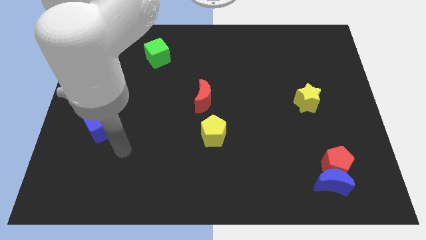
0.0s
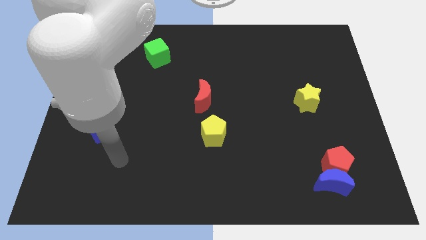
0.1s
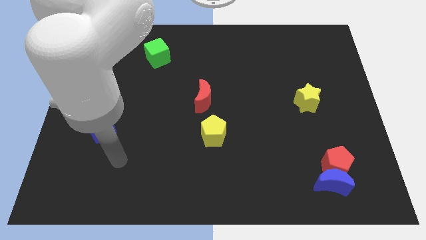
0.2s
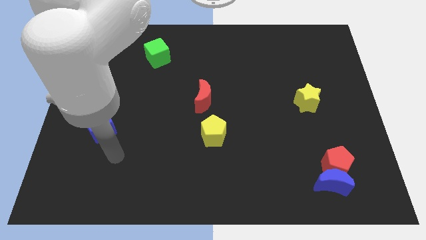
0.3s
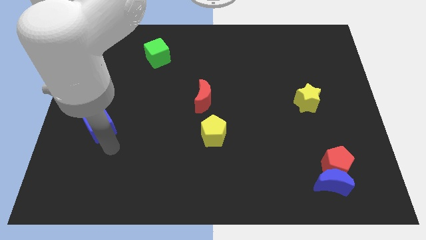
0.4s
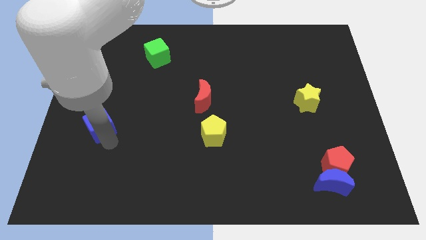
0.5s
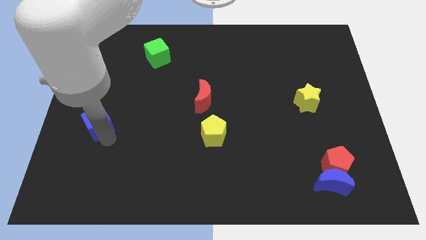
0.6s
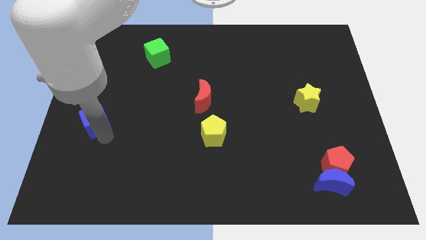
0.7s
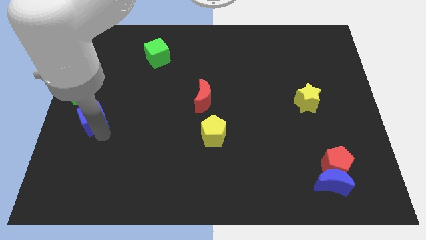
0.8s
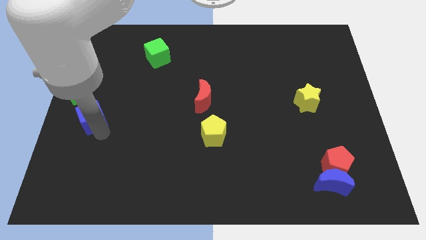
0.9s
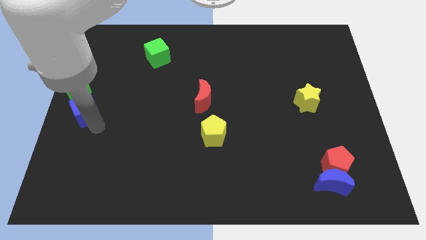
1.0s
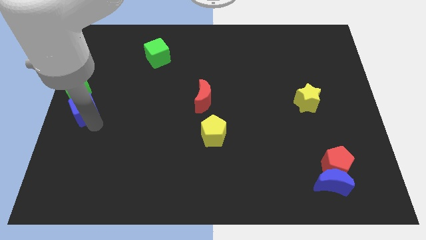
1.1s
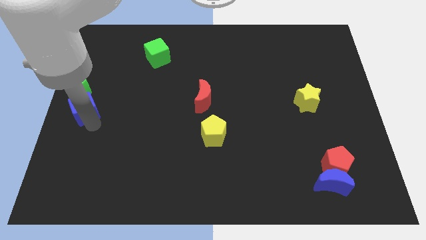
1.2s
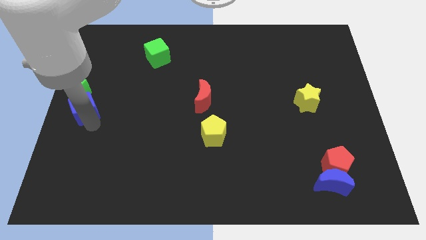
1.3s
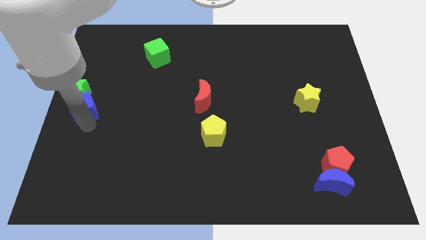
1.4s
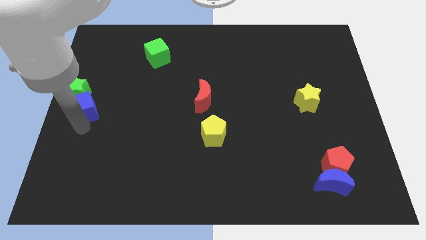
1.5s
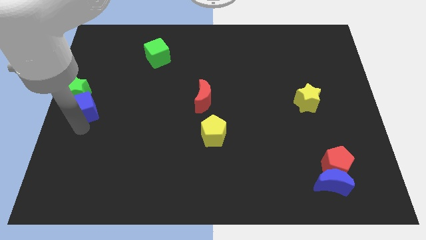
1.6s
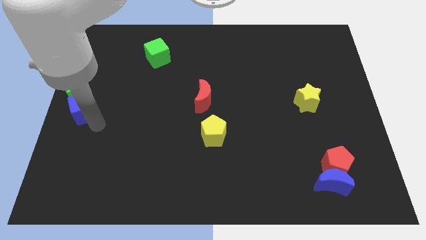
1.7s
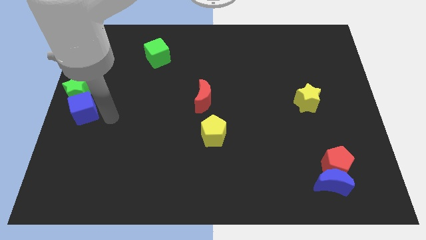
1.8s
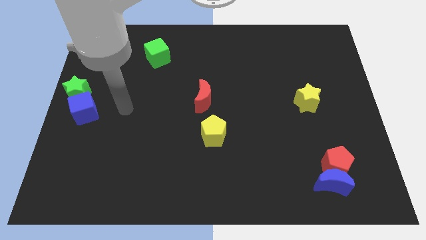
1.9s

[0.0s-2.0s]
move the blue cube below to the green star

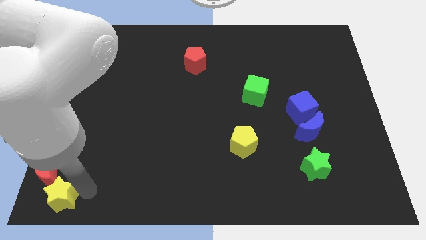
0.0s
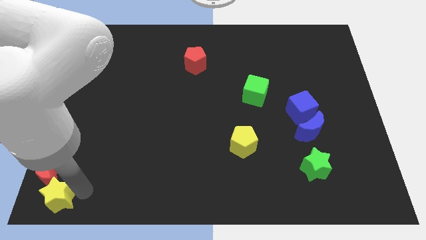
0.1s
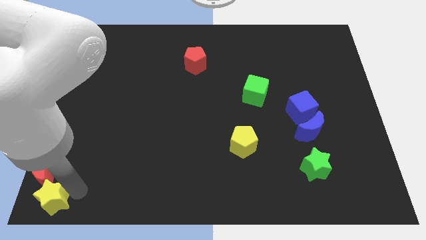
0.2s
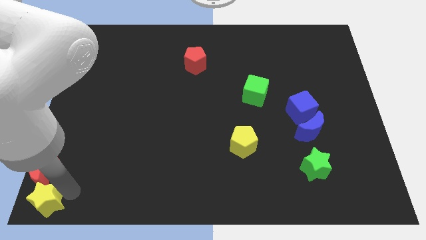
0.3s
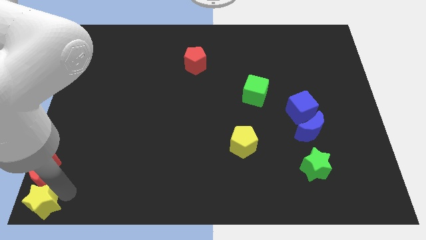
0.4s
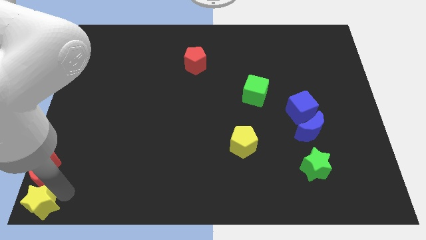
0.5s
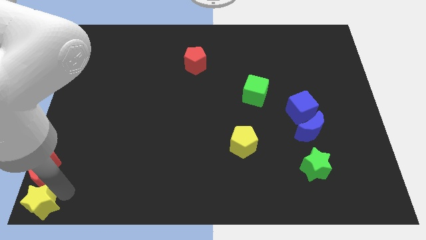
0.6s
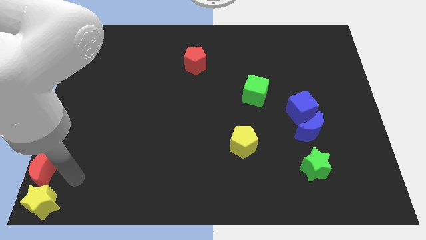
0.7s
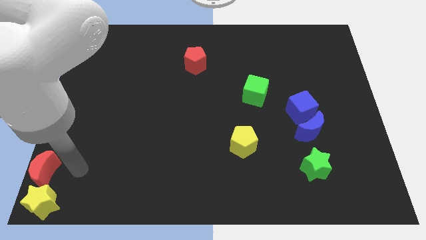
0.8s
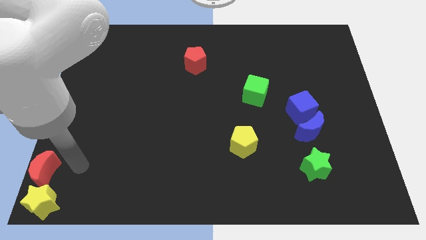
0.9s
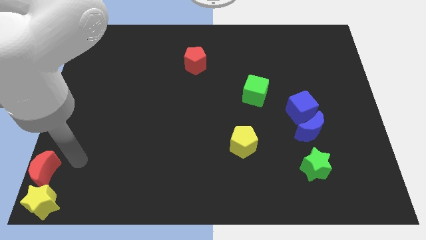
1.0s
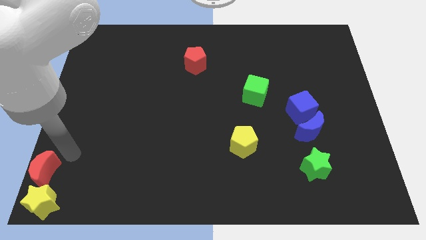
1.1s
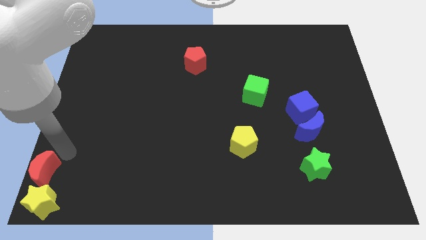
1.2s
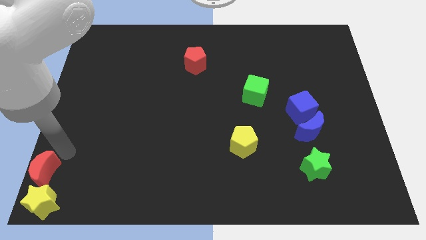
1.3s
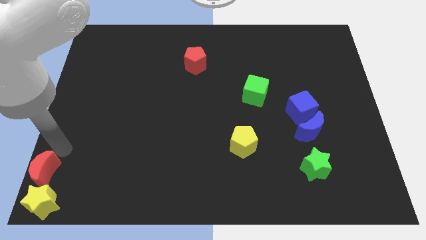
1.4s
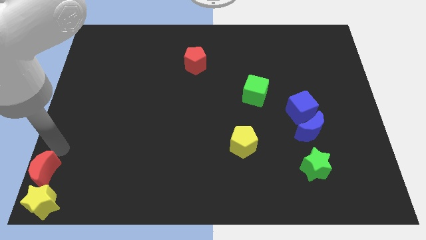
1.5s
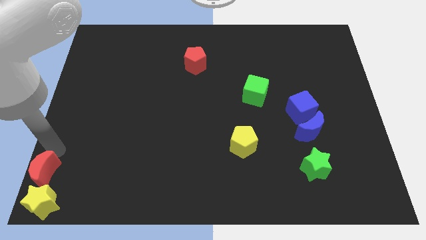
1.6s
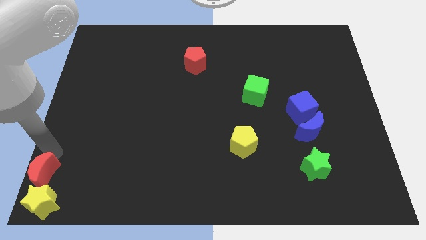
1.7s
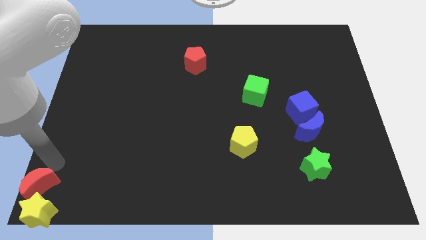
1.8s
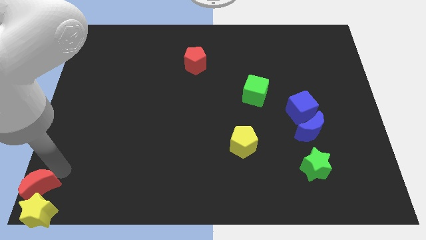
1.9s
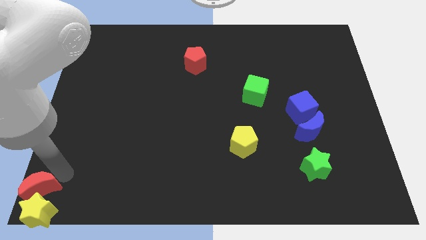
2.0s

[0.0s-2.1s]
push the yellow star and red moon to the bottom left corner of the board

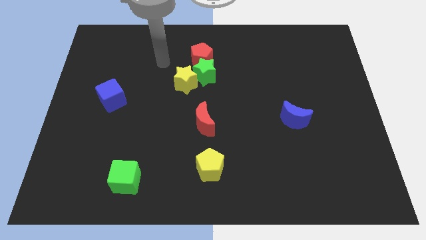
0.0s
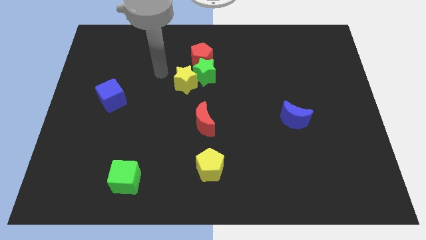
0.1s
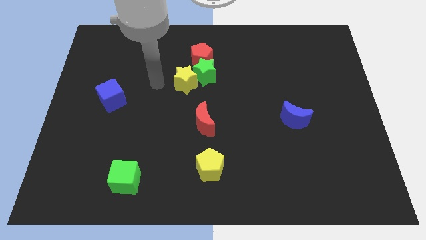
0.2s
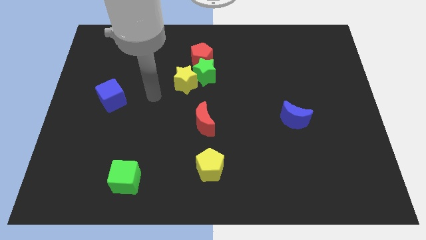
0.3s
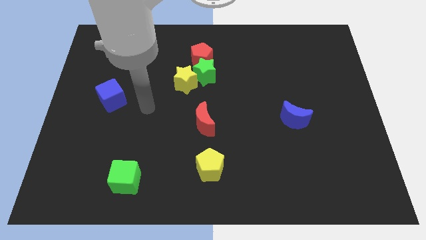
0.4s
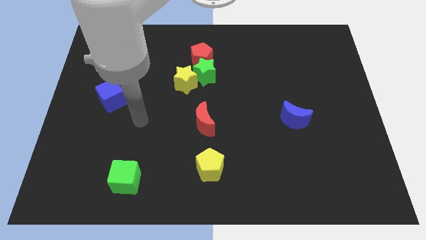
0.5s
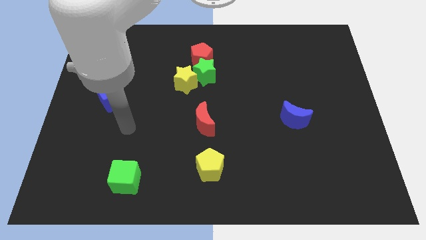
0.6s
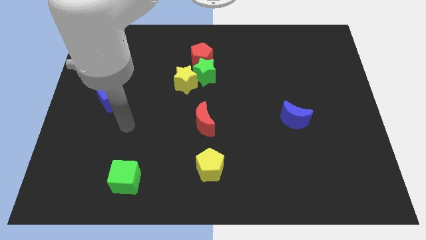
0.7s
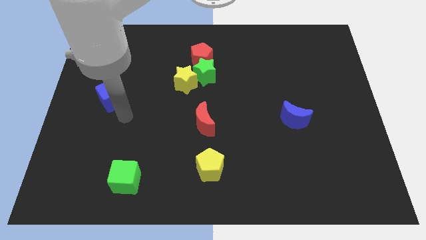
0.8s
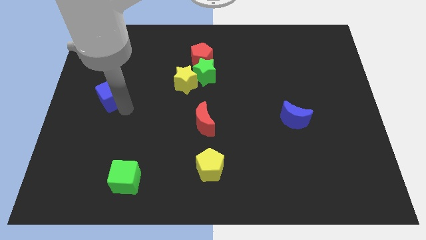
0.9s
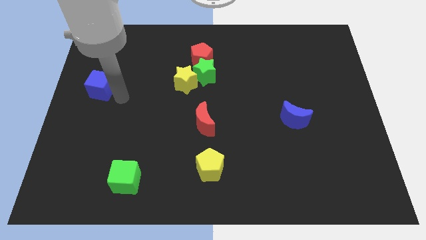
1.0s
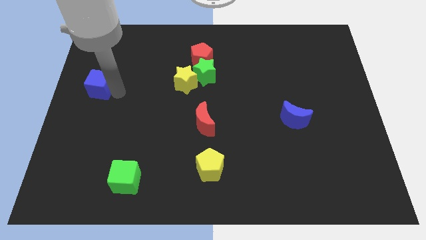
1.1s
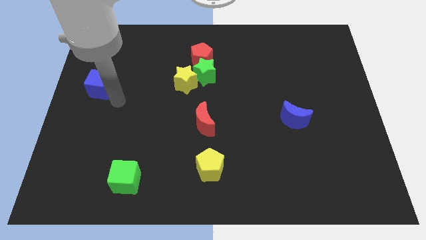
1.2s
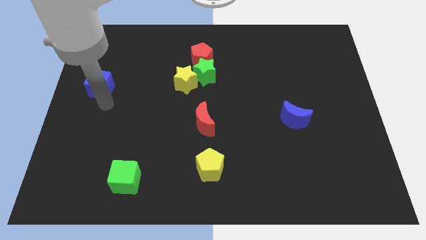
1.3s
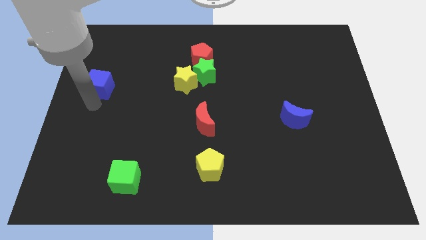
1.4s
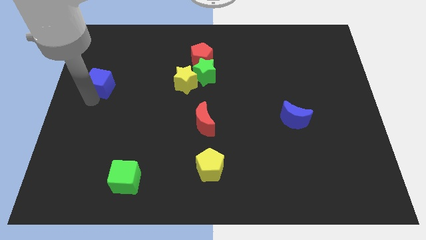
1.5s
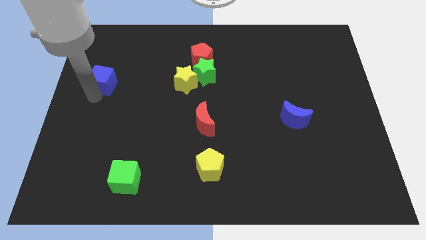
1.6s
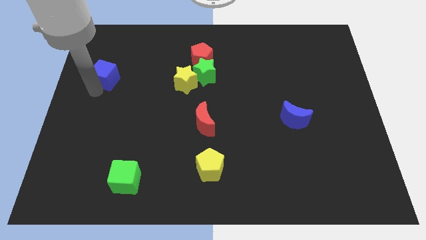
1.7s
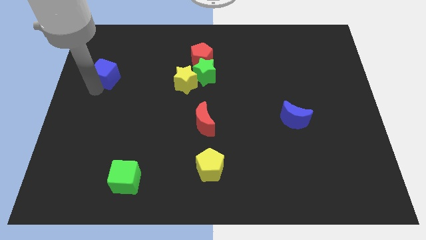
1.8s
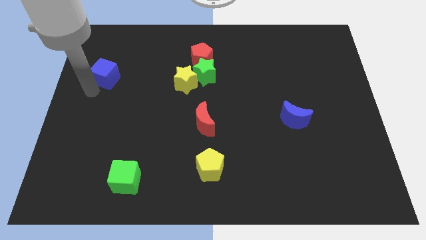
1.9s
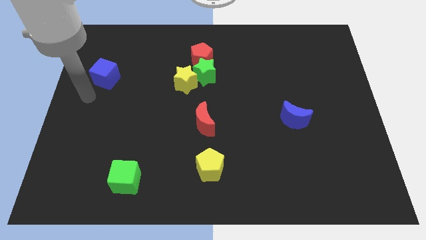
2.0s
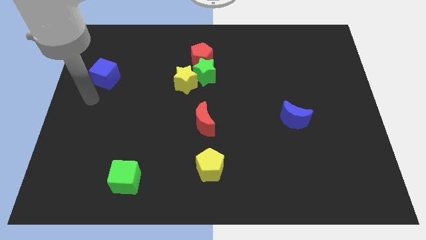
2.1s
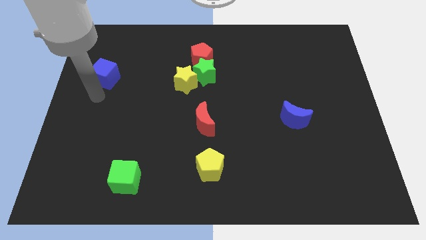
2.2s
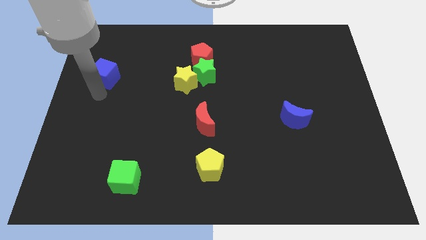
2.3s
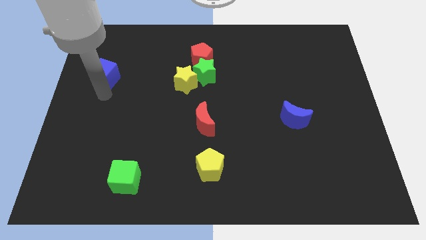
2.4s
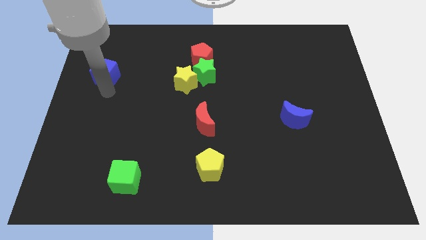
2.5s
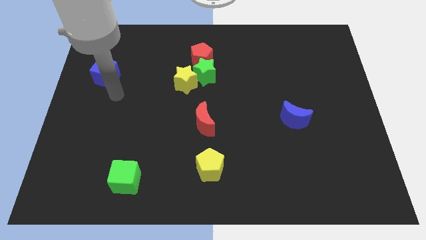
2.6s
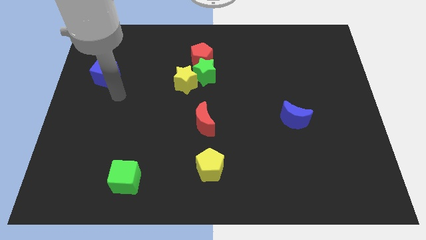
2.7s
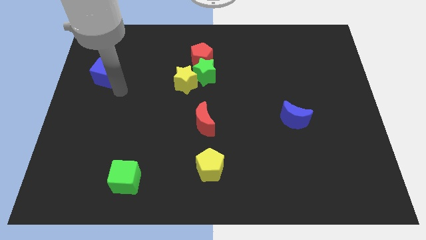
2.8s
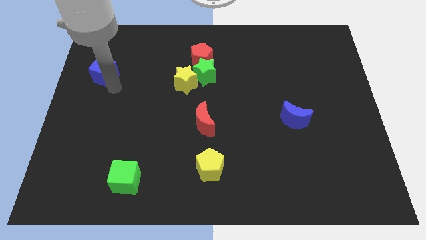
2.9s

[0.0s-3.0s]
push blue cube slightly upwards

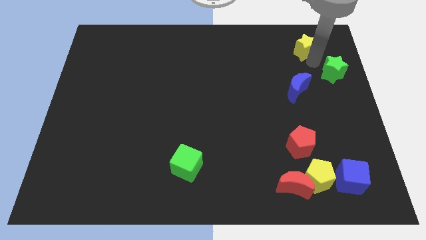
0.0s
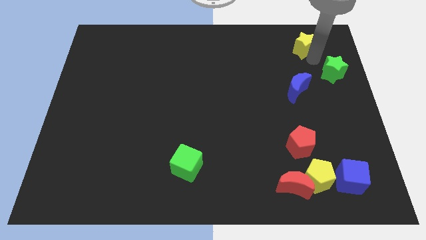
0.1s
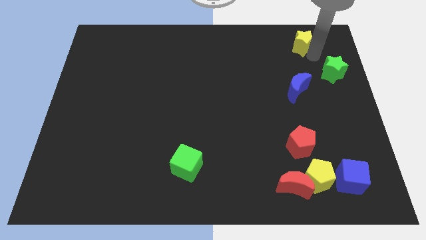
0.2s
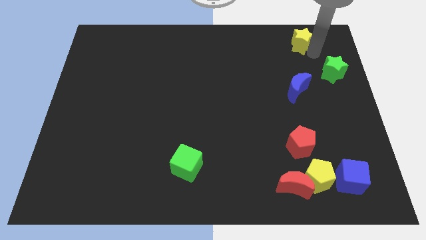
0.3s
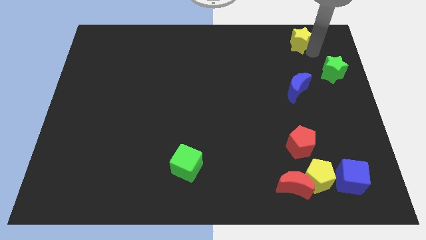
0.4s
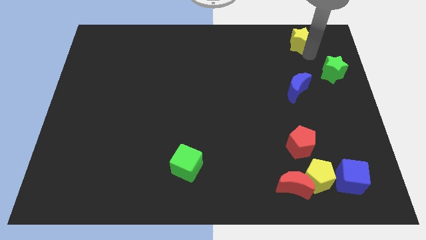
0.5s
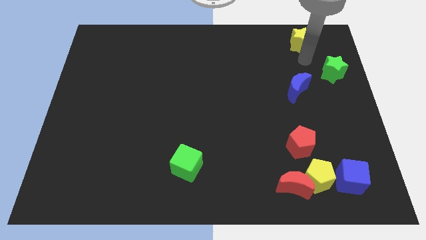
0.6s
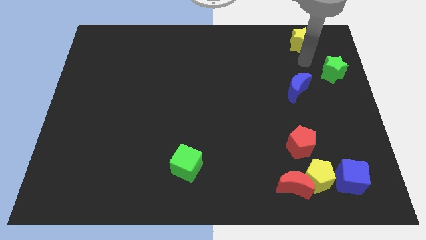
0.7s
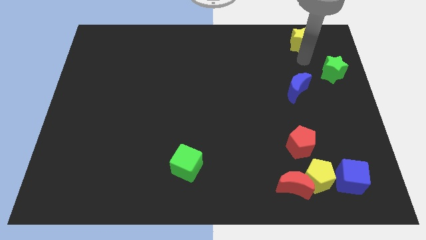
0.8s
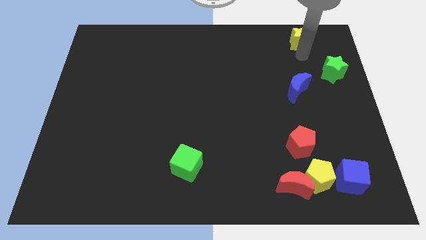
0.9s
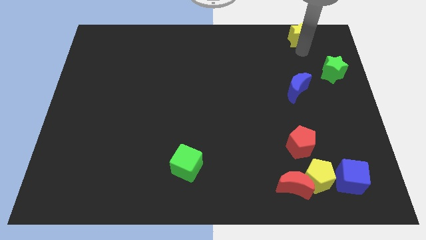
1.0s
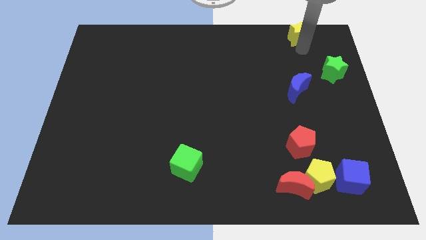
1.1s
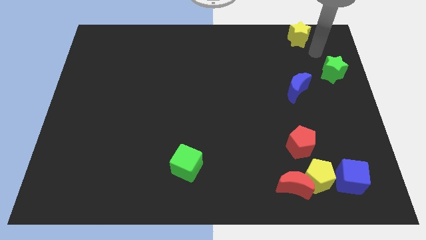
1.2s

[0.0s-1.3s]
move yellow star towards top

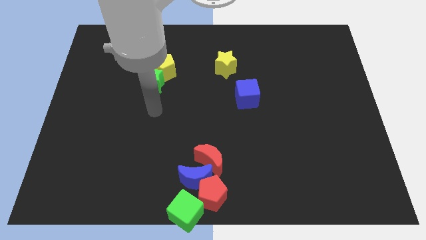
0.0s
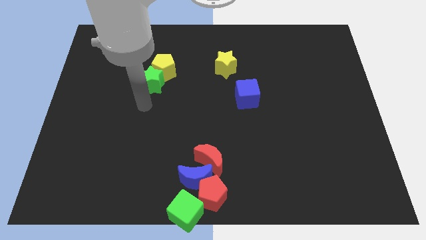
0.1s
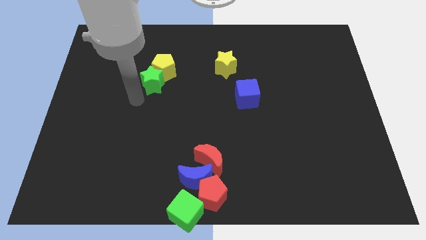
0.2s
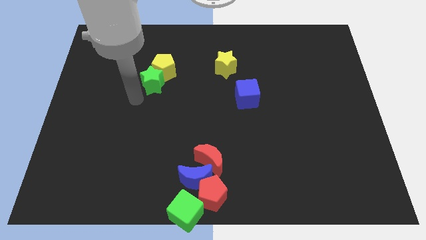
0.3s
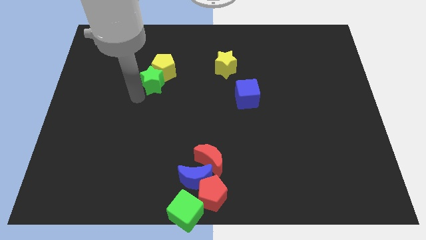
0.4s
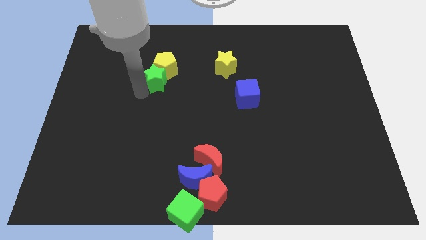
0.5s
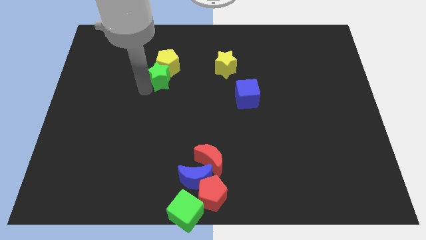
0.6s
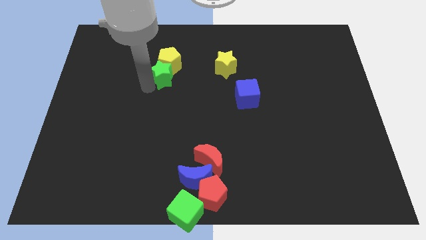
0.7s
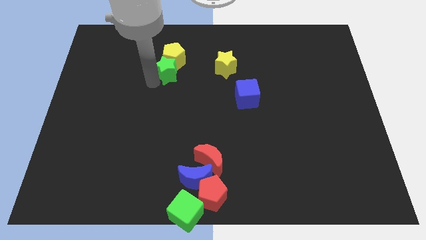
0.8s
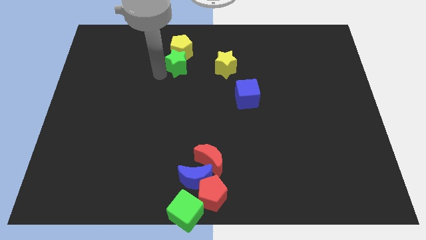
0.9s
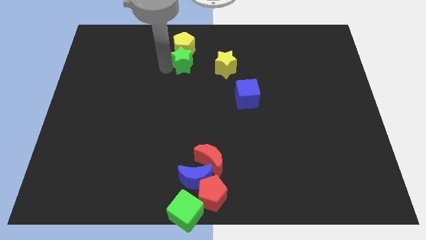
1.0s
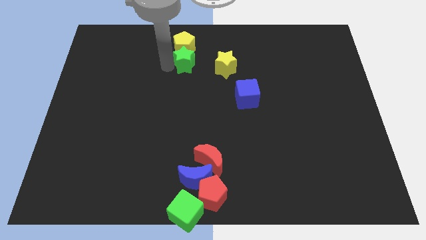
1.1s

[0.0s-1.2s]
push the yellow pentagon with the green star towards the top center of the board
